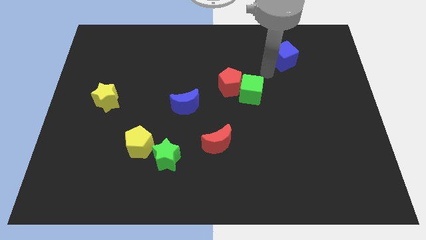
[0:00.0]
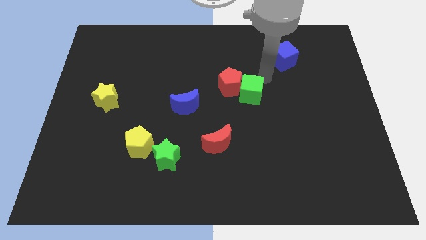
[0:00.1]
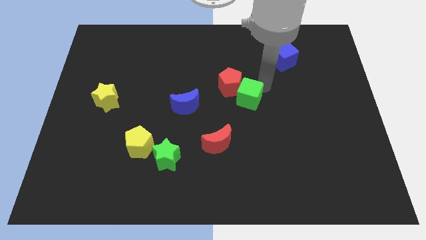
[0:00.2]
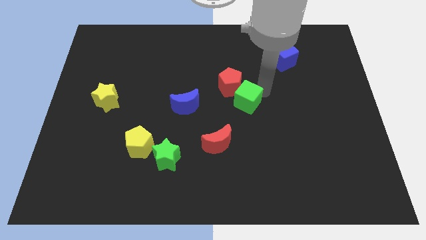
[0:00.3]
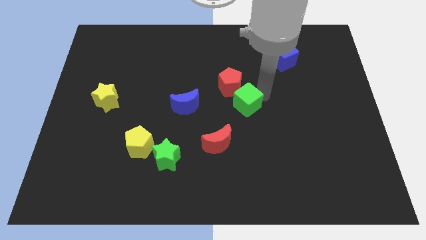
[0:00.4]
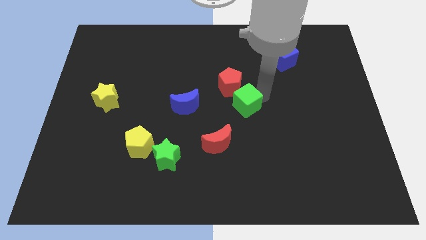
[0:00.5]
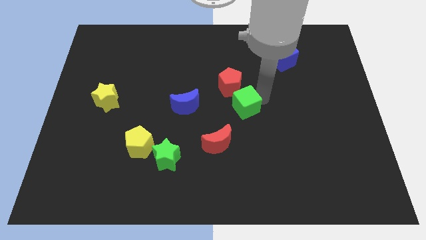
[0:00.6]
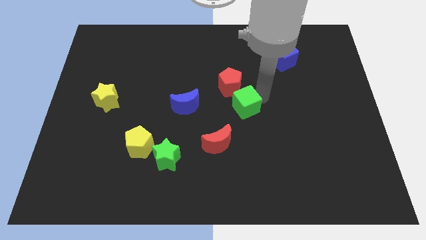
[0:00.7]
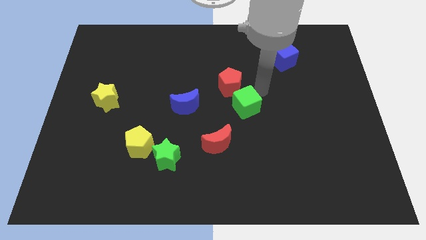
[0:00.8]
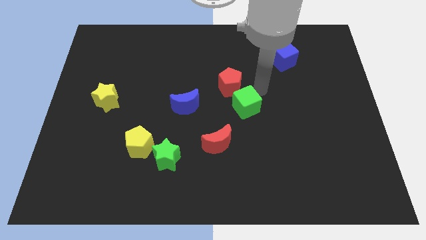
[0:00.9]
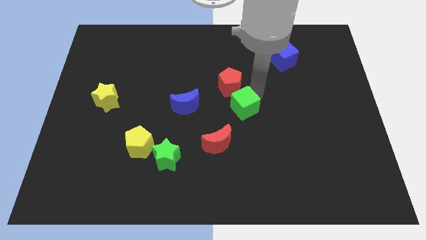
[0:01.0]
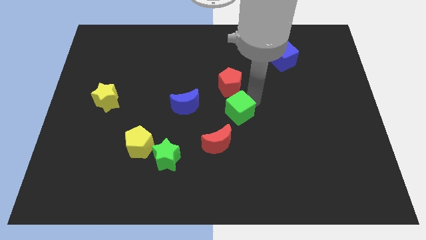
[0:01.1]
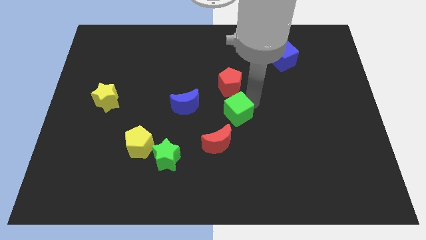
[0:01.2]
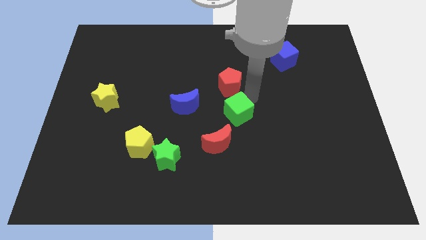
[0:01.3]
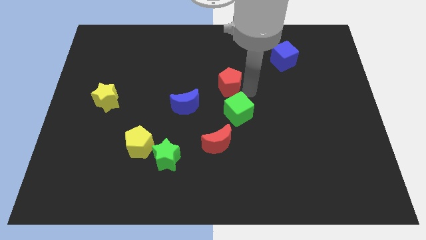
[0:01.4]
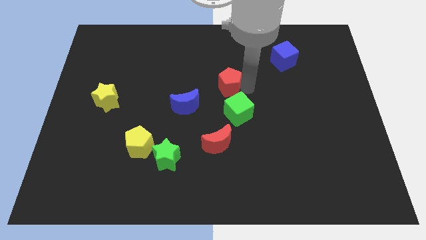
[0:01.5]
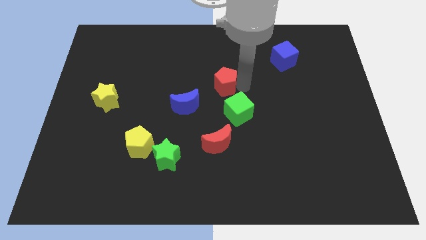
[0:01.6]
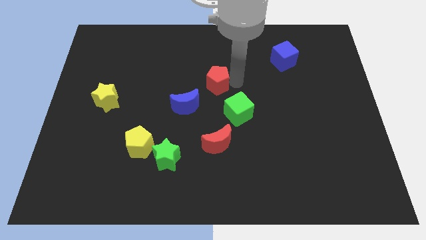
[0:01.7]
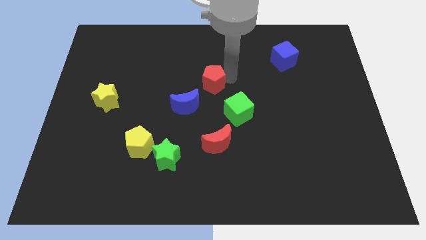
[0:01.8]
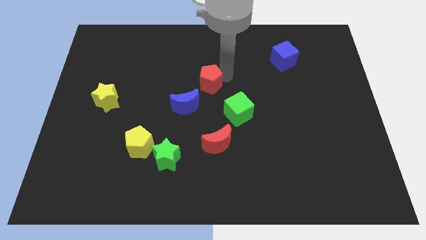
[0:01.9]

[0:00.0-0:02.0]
move the green cube and the red pentagon diagonal to each other

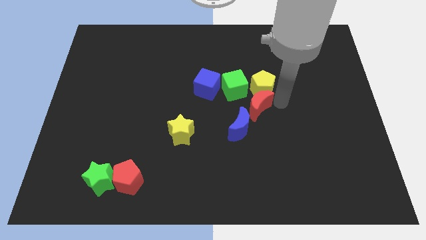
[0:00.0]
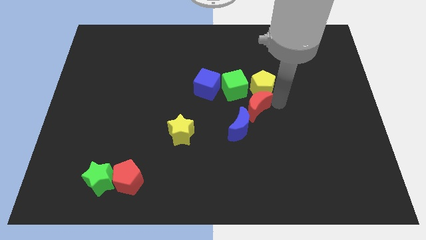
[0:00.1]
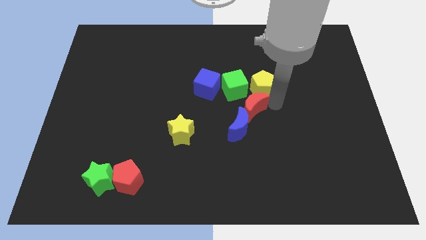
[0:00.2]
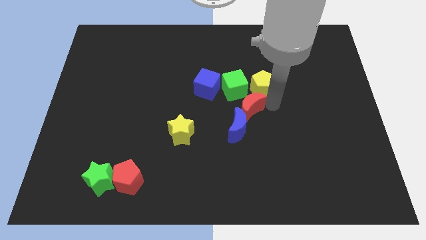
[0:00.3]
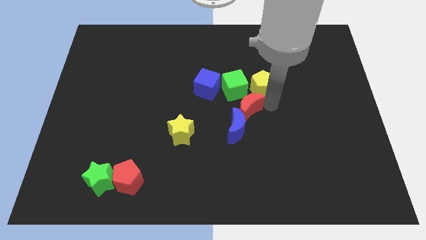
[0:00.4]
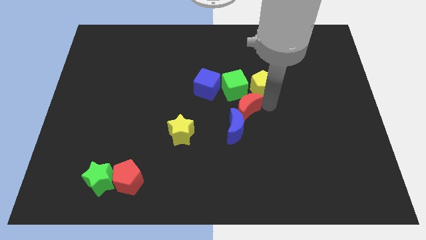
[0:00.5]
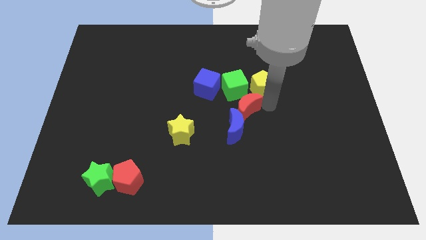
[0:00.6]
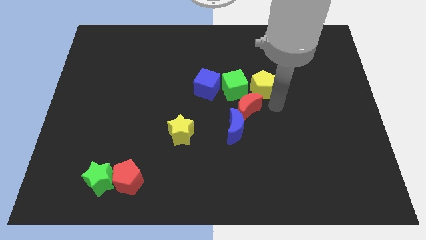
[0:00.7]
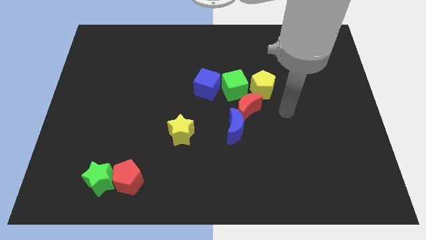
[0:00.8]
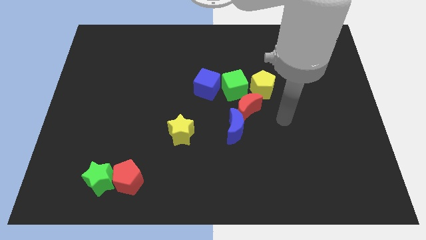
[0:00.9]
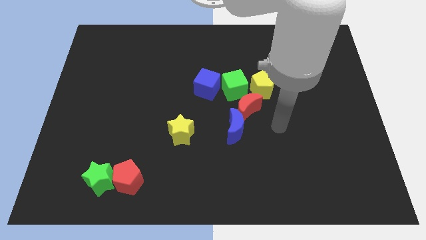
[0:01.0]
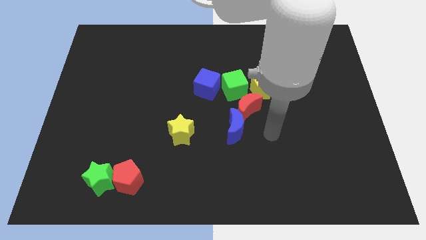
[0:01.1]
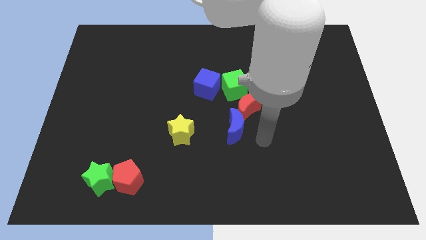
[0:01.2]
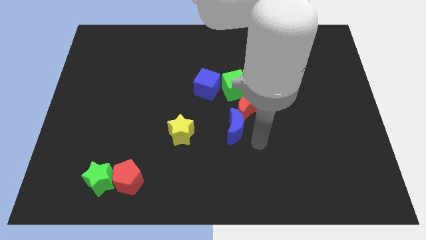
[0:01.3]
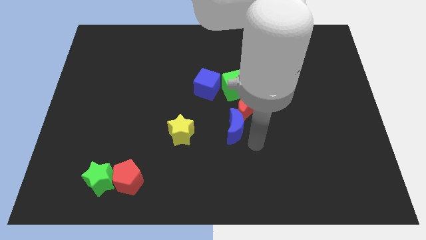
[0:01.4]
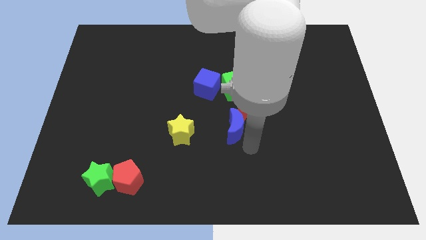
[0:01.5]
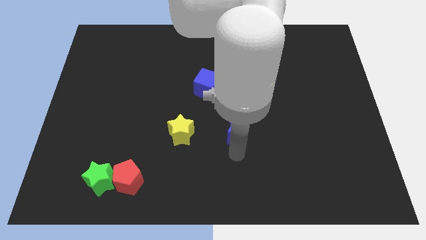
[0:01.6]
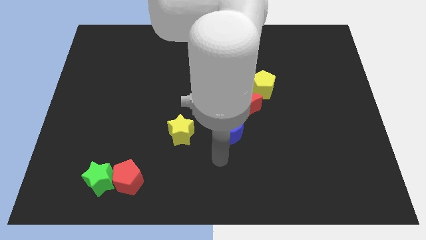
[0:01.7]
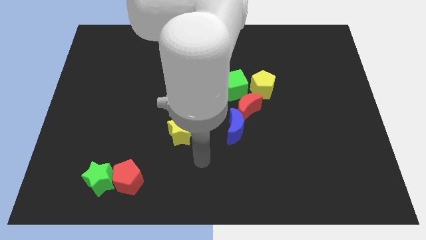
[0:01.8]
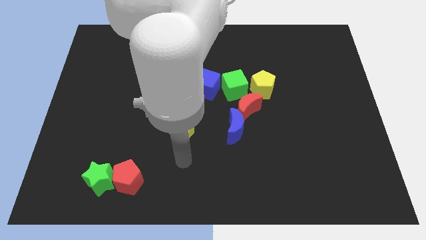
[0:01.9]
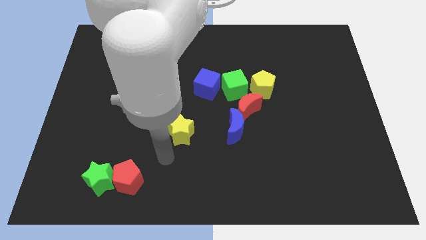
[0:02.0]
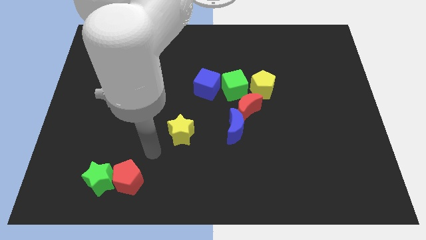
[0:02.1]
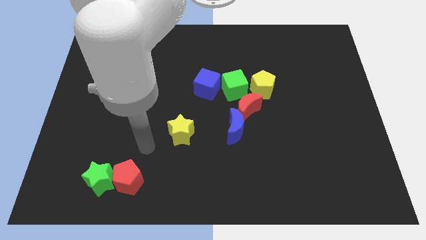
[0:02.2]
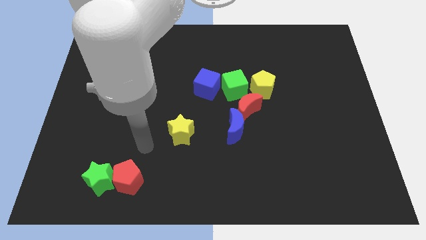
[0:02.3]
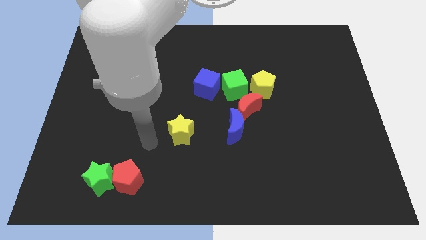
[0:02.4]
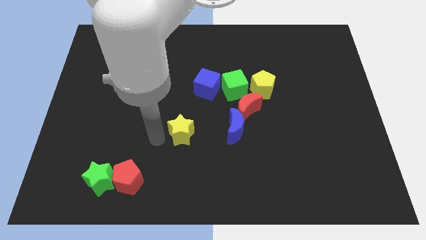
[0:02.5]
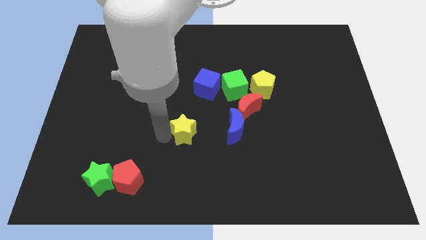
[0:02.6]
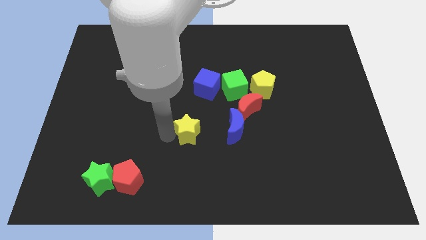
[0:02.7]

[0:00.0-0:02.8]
place the arm to the left of the yellow star

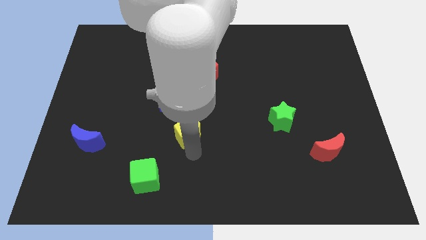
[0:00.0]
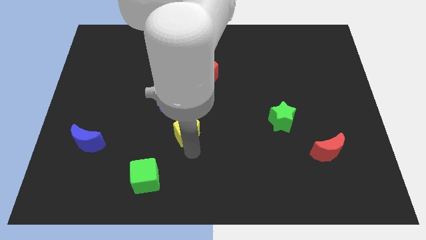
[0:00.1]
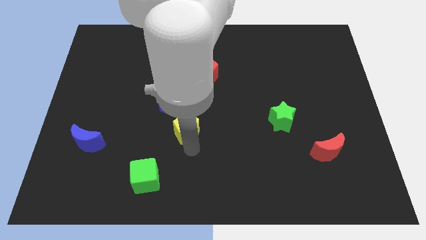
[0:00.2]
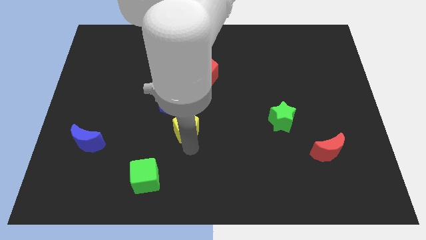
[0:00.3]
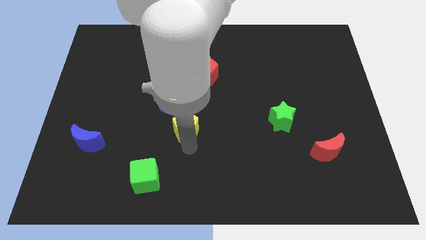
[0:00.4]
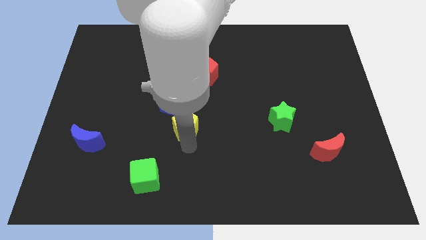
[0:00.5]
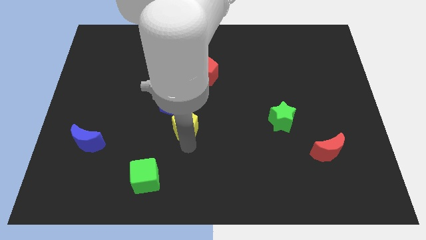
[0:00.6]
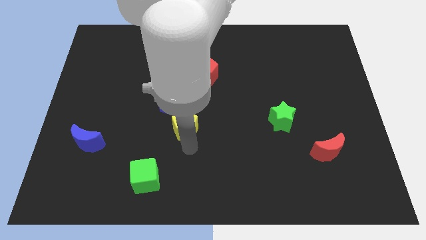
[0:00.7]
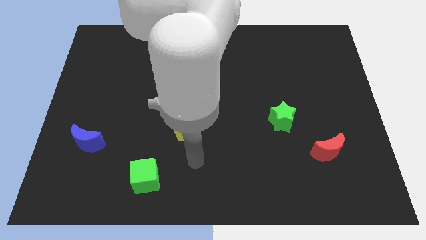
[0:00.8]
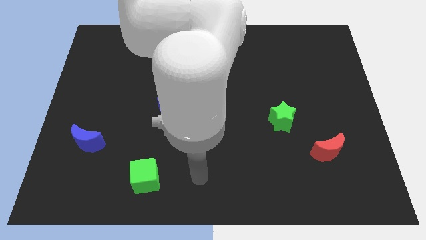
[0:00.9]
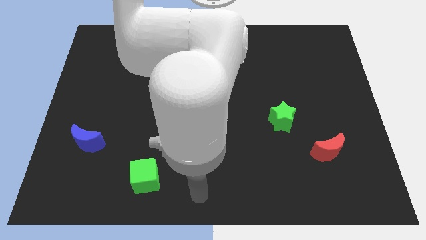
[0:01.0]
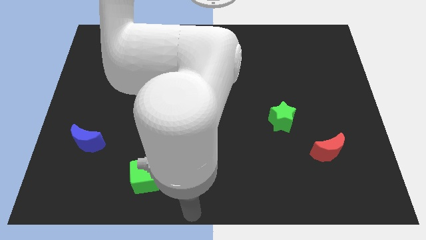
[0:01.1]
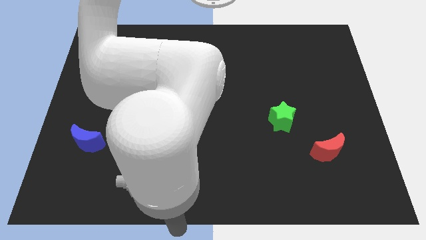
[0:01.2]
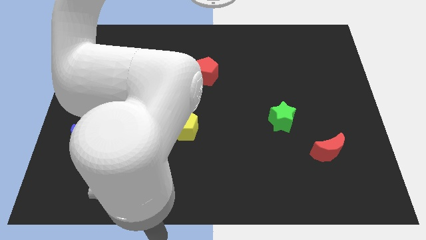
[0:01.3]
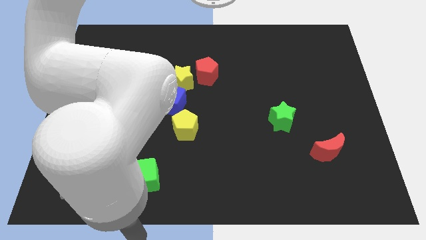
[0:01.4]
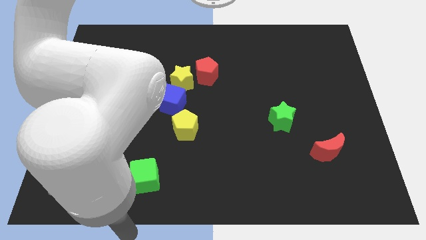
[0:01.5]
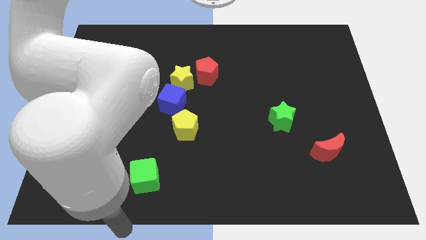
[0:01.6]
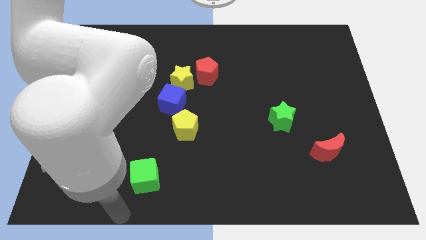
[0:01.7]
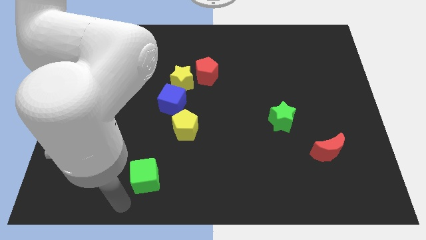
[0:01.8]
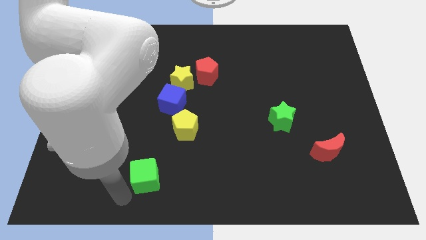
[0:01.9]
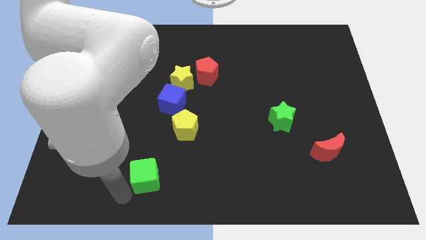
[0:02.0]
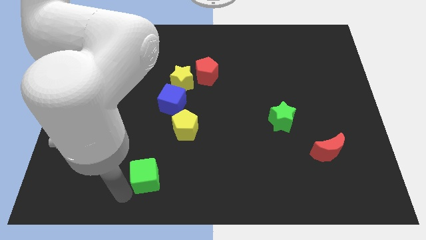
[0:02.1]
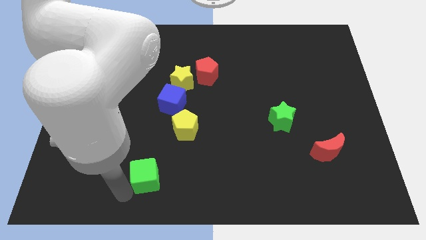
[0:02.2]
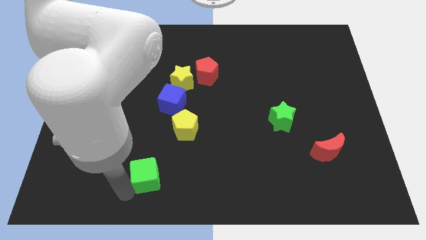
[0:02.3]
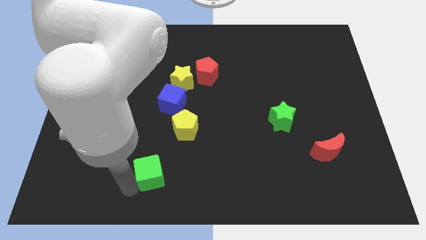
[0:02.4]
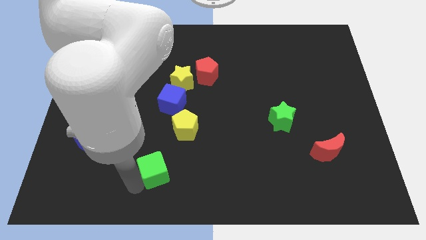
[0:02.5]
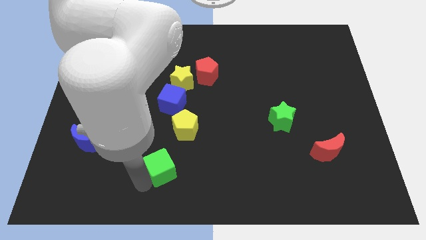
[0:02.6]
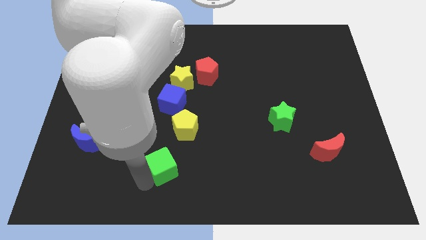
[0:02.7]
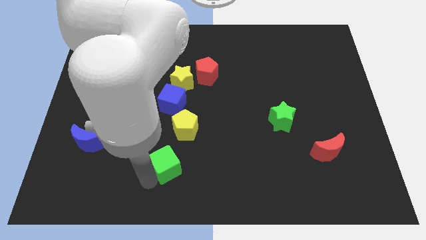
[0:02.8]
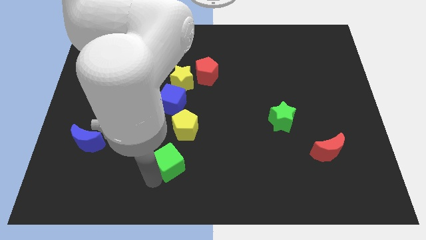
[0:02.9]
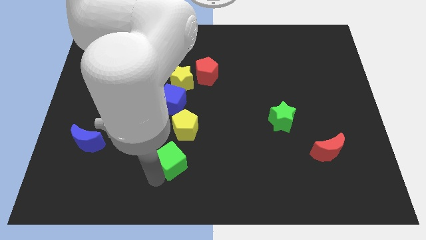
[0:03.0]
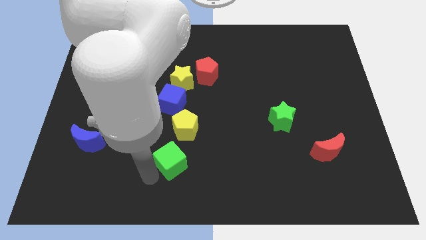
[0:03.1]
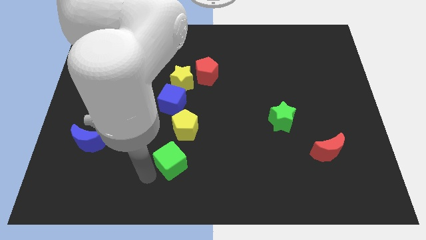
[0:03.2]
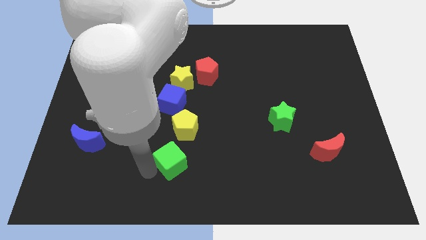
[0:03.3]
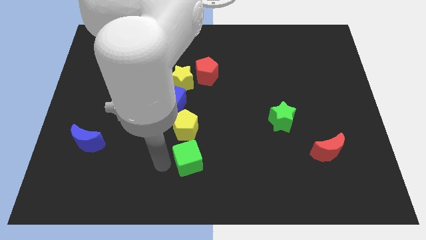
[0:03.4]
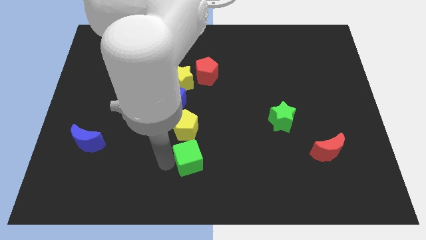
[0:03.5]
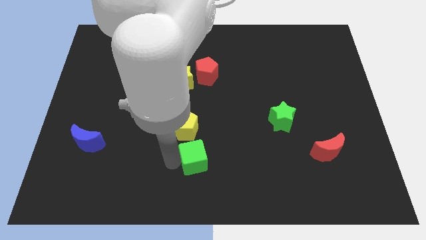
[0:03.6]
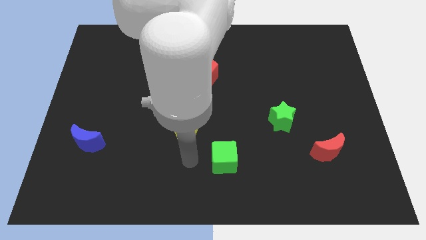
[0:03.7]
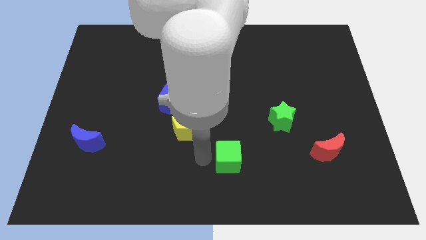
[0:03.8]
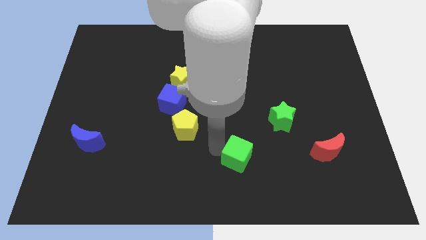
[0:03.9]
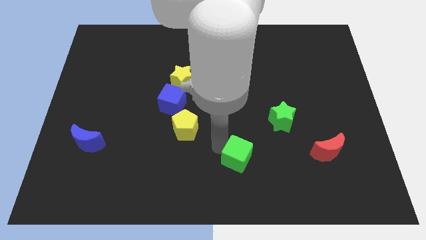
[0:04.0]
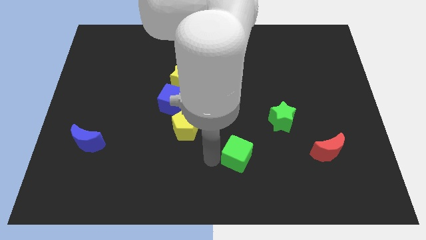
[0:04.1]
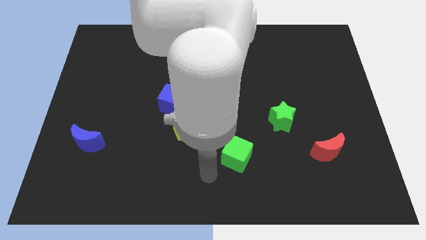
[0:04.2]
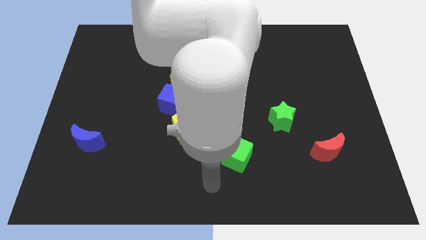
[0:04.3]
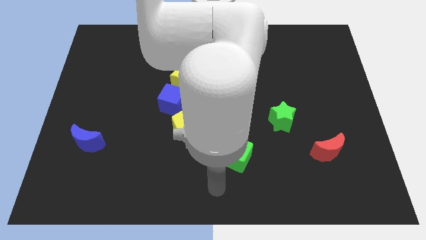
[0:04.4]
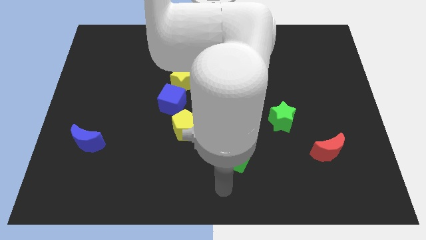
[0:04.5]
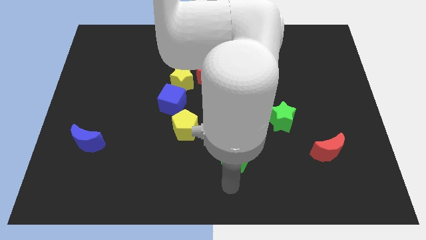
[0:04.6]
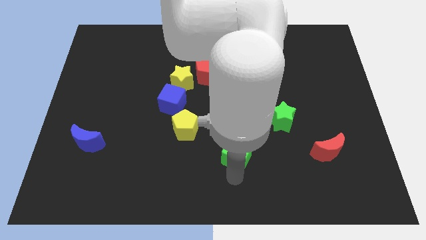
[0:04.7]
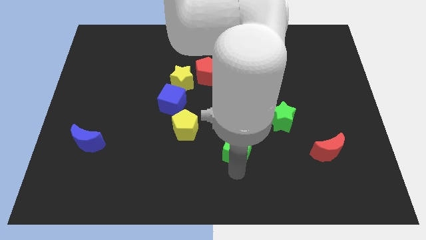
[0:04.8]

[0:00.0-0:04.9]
push the green cube to the right
